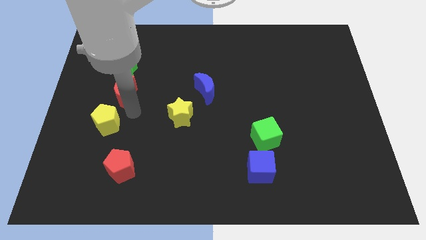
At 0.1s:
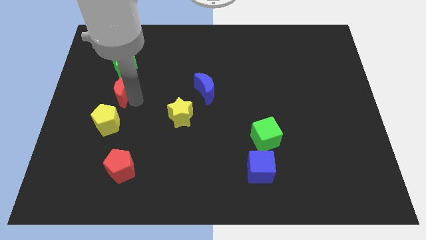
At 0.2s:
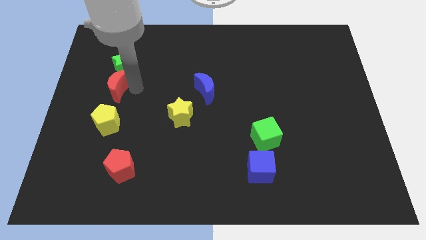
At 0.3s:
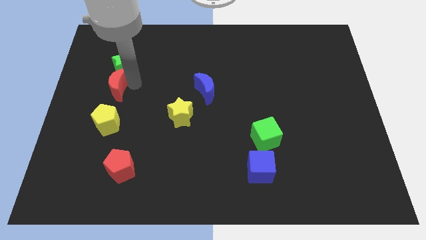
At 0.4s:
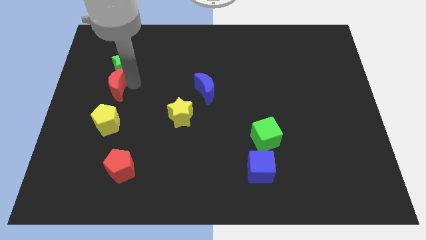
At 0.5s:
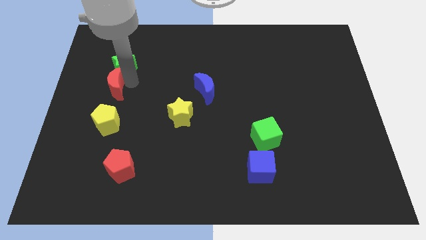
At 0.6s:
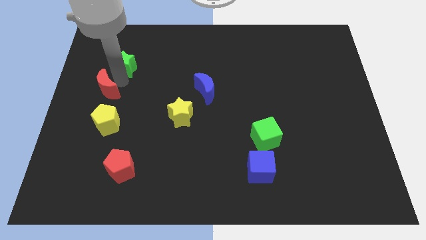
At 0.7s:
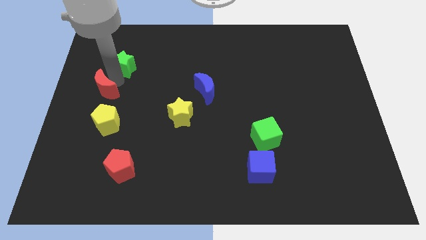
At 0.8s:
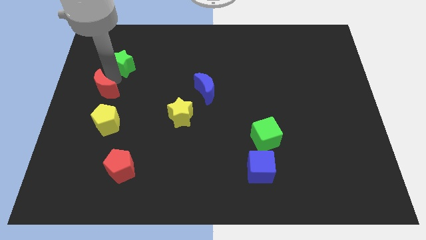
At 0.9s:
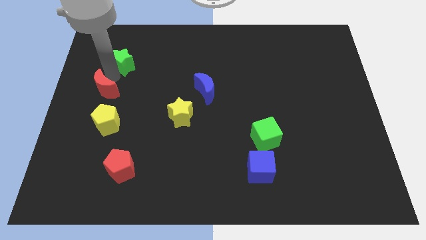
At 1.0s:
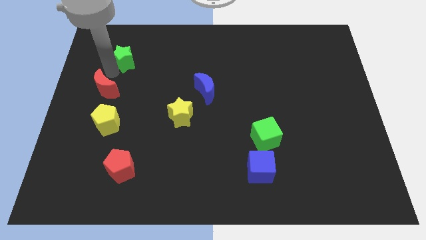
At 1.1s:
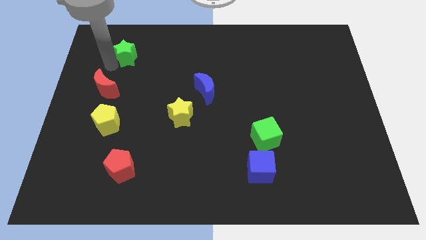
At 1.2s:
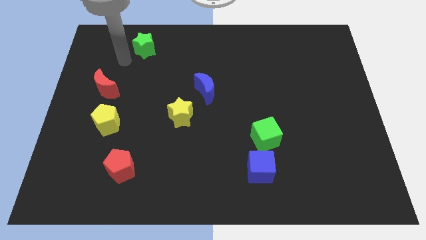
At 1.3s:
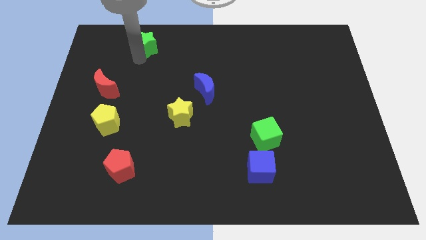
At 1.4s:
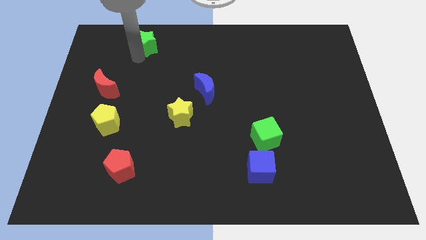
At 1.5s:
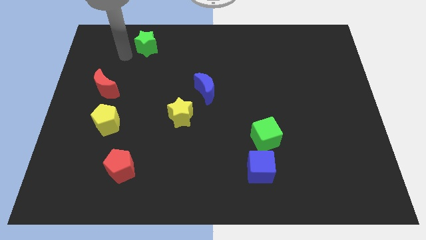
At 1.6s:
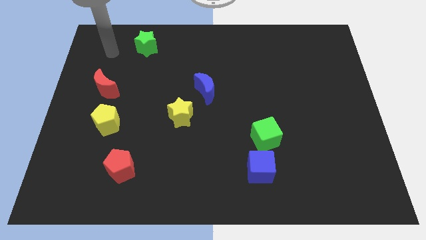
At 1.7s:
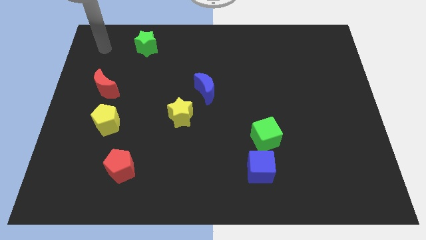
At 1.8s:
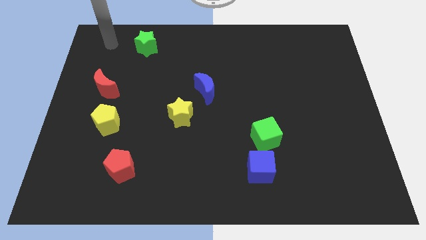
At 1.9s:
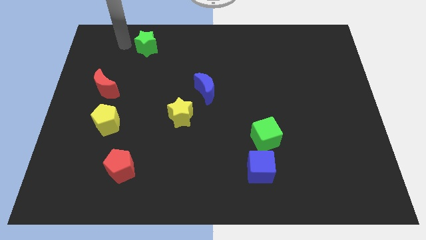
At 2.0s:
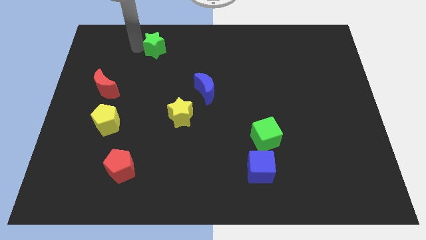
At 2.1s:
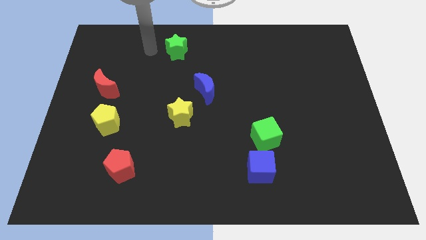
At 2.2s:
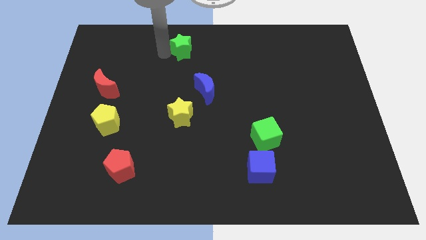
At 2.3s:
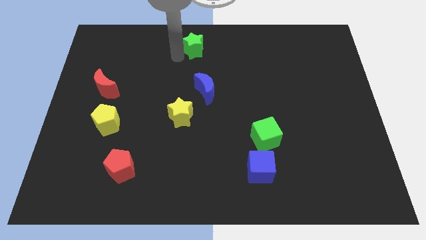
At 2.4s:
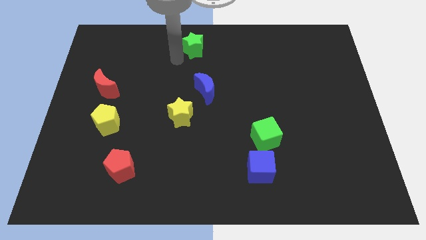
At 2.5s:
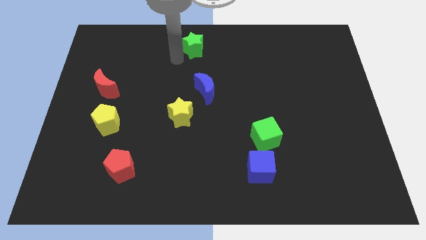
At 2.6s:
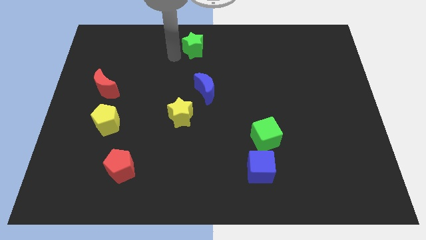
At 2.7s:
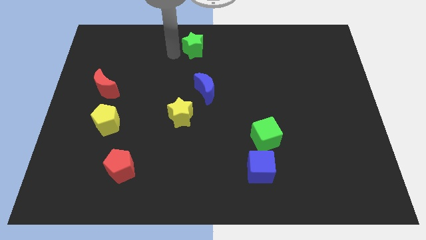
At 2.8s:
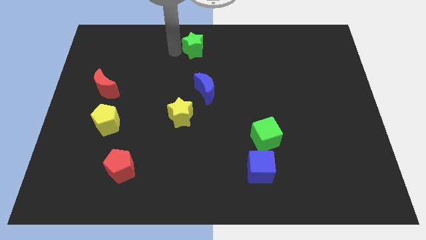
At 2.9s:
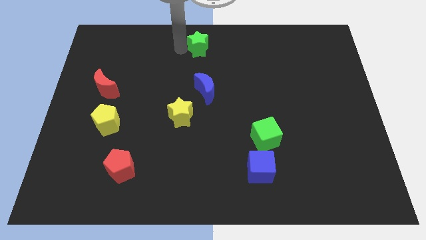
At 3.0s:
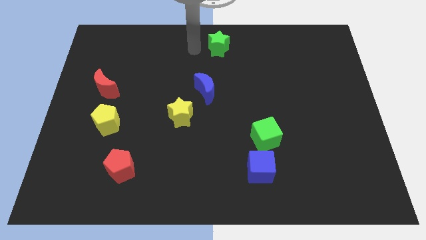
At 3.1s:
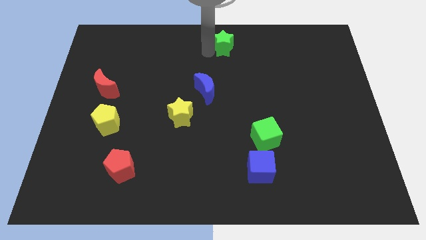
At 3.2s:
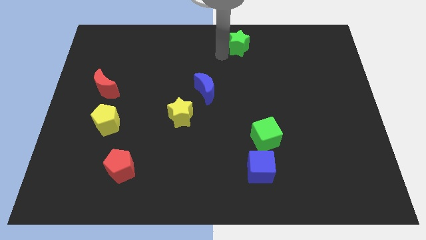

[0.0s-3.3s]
push the green star on the center top

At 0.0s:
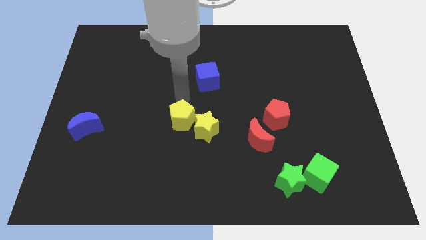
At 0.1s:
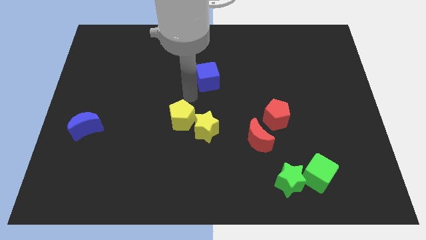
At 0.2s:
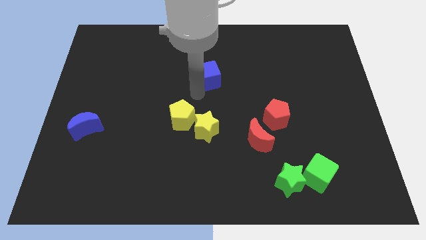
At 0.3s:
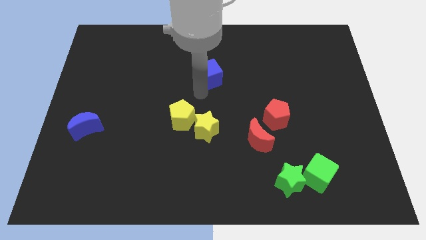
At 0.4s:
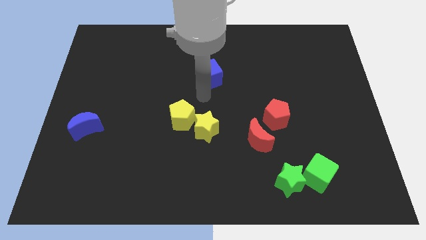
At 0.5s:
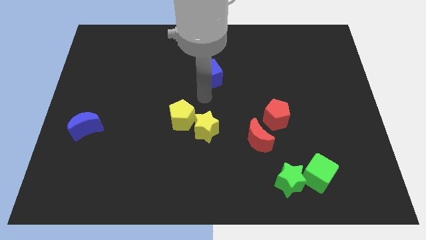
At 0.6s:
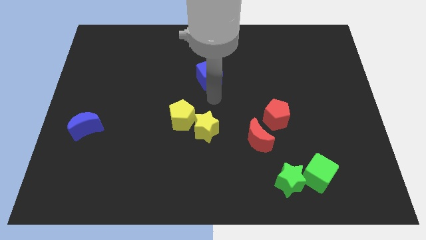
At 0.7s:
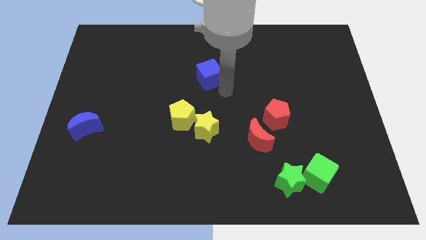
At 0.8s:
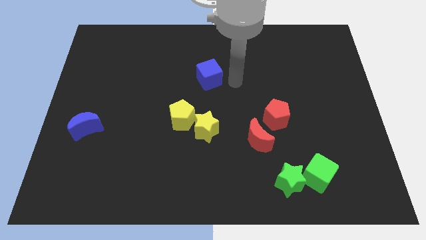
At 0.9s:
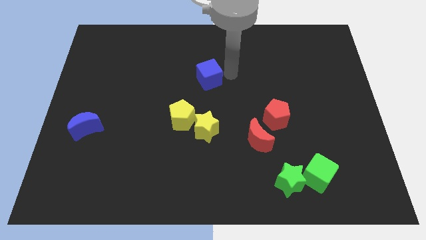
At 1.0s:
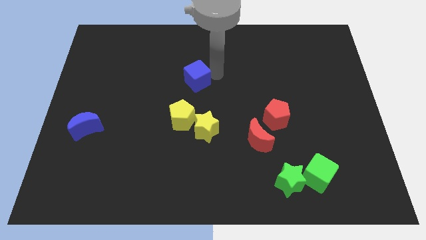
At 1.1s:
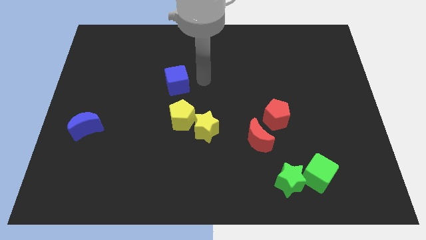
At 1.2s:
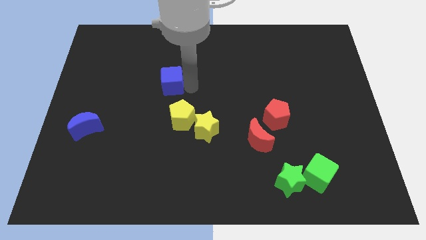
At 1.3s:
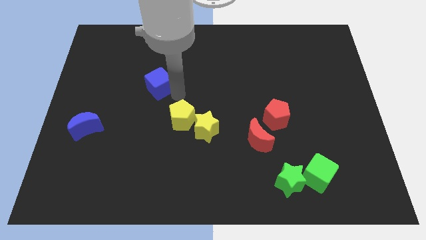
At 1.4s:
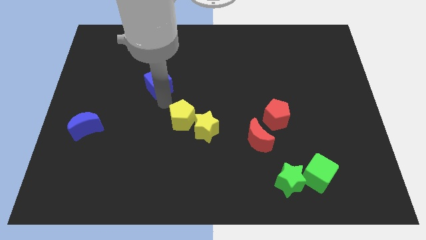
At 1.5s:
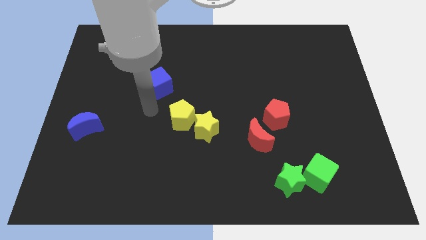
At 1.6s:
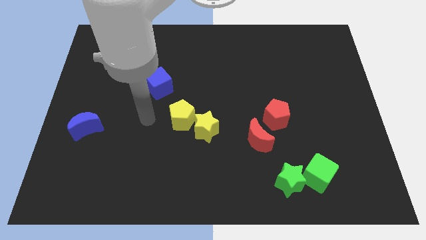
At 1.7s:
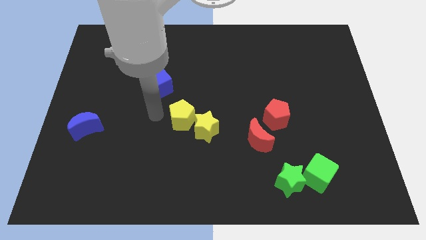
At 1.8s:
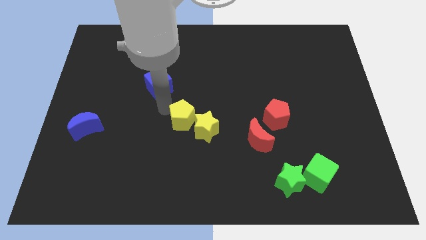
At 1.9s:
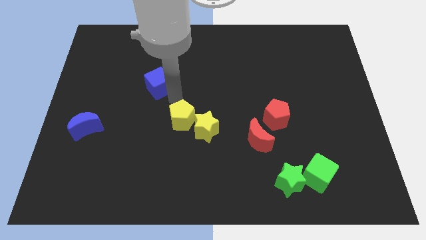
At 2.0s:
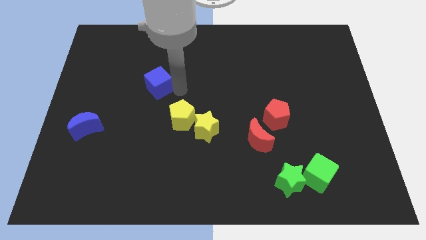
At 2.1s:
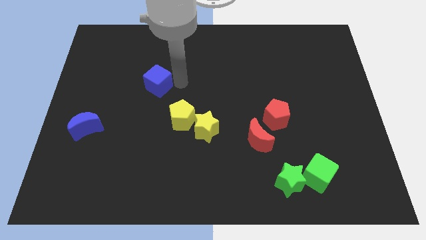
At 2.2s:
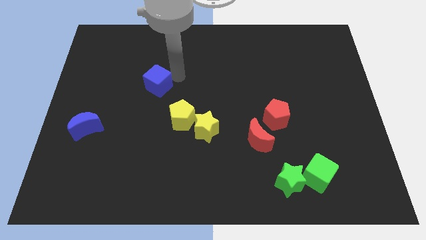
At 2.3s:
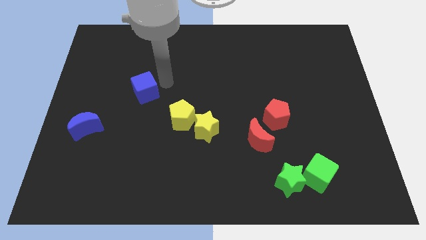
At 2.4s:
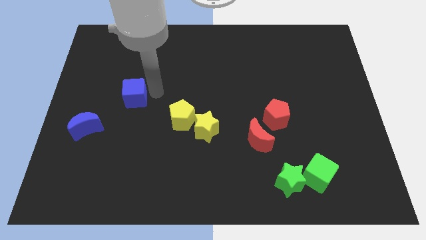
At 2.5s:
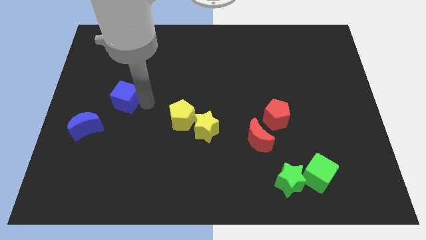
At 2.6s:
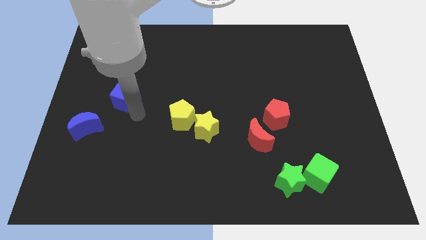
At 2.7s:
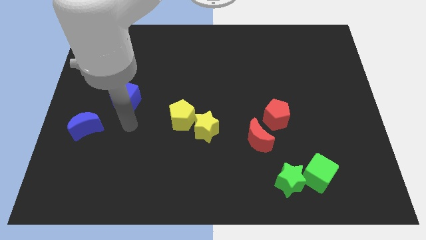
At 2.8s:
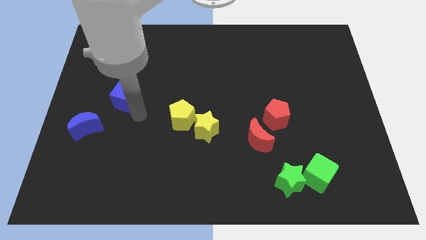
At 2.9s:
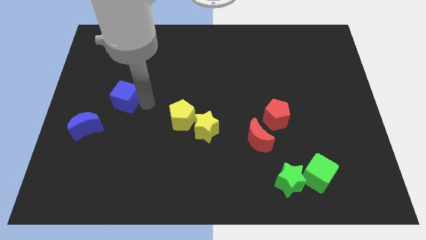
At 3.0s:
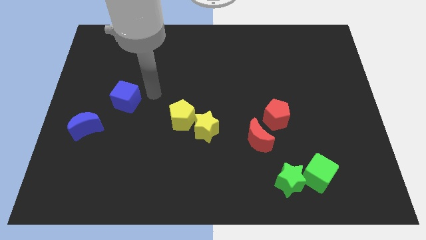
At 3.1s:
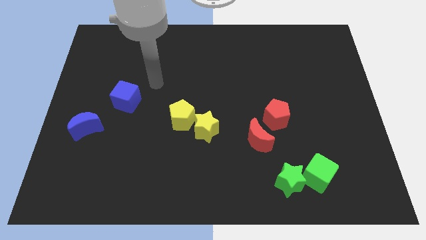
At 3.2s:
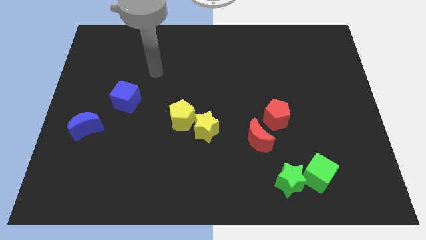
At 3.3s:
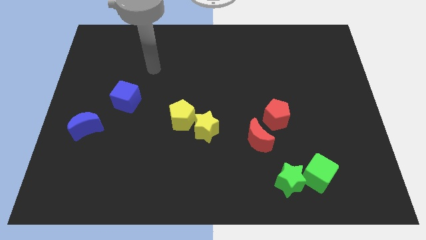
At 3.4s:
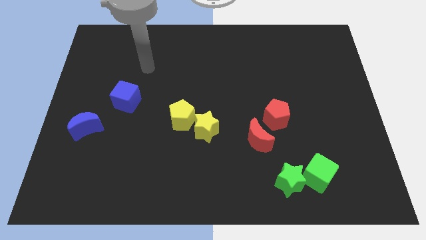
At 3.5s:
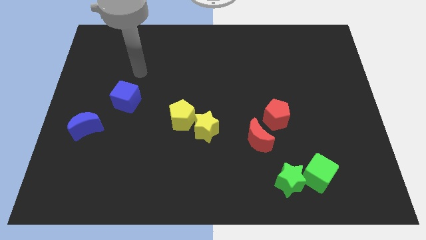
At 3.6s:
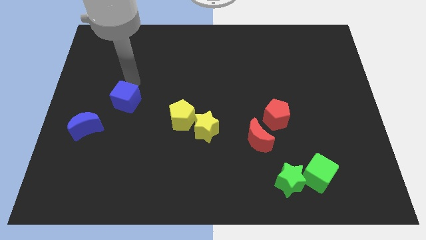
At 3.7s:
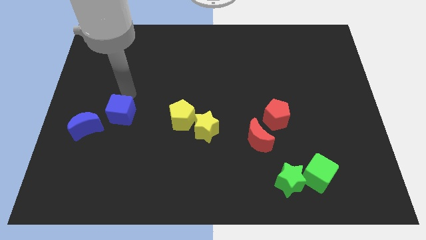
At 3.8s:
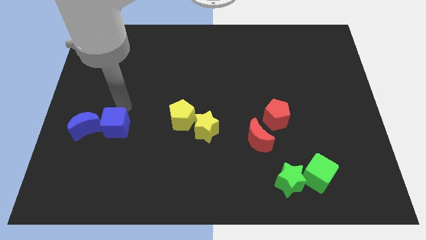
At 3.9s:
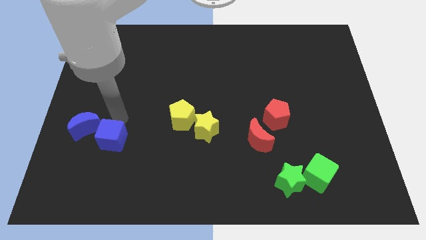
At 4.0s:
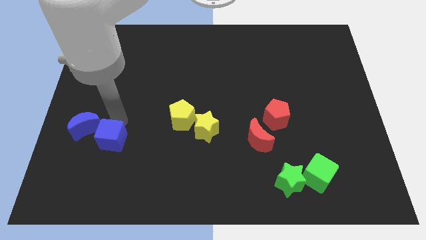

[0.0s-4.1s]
push the blue cube close to the blue moon

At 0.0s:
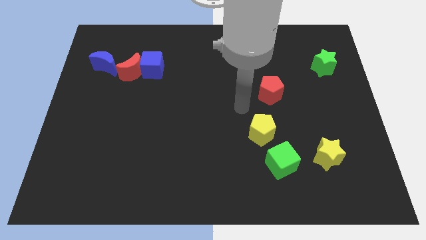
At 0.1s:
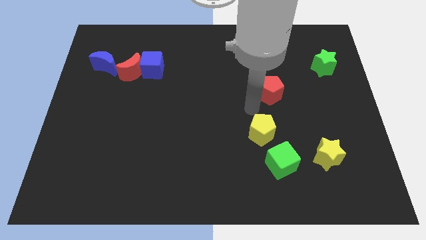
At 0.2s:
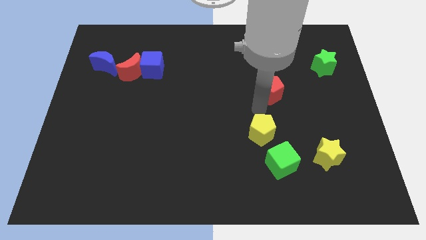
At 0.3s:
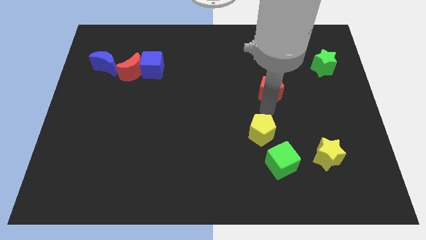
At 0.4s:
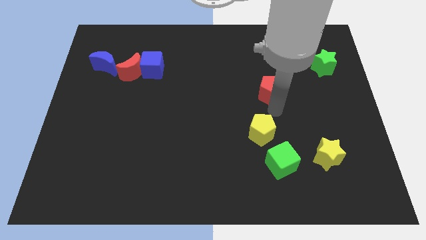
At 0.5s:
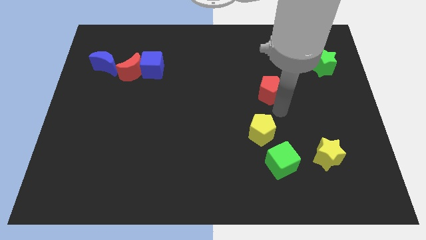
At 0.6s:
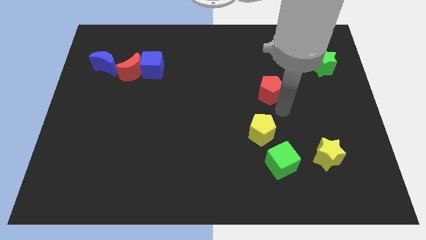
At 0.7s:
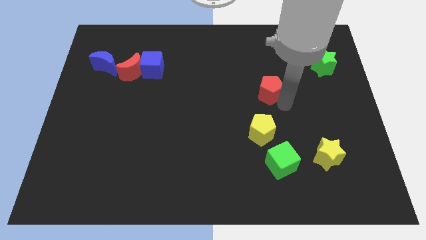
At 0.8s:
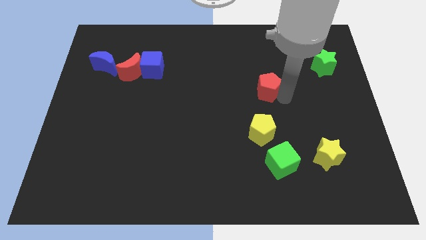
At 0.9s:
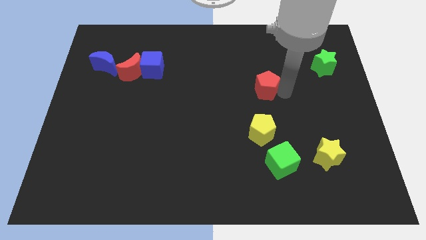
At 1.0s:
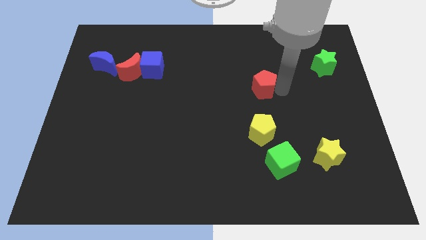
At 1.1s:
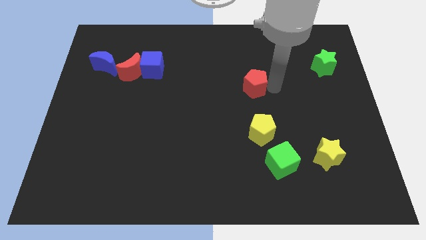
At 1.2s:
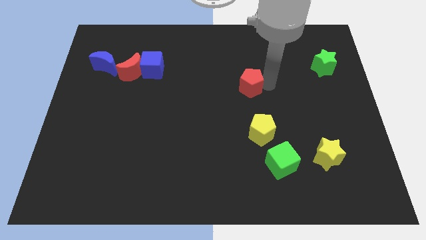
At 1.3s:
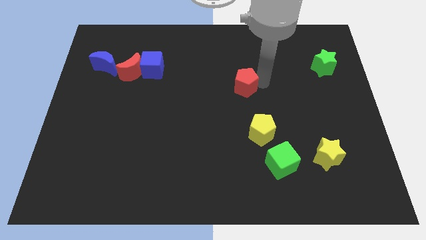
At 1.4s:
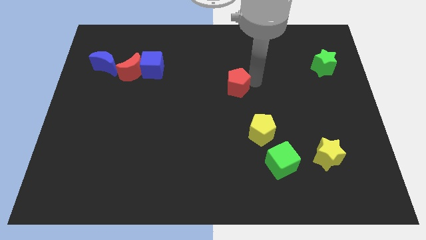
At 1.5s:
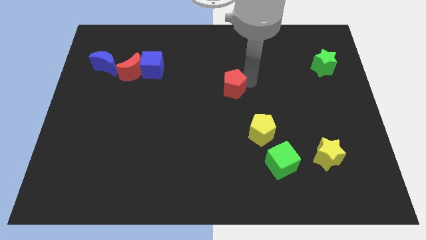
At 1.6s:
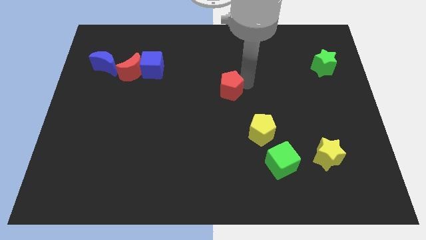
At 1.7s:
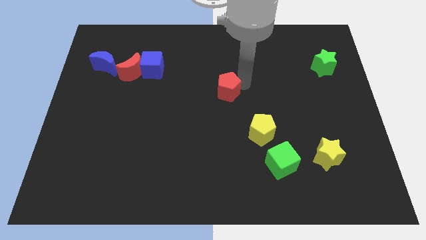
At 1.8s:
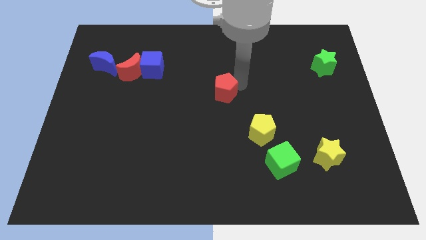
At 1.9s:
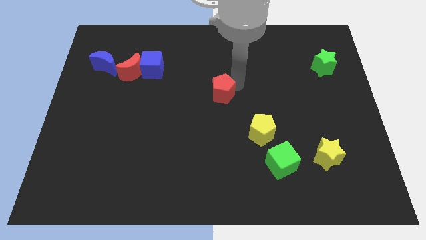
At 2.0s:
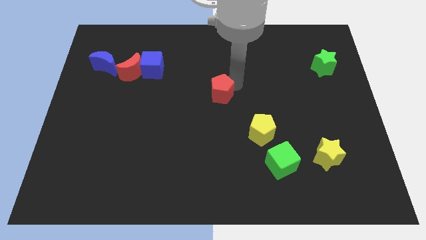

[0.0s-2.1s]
slide the red pentagon diagonally to the top left of the yellow pentagon
